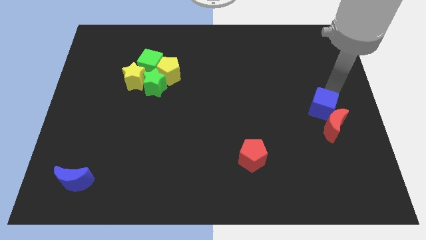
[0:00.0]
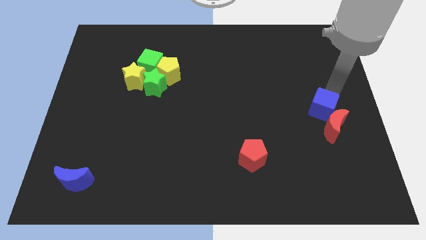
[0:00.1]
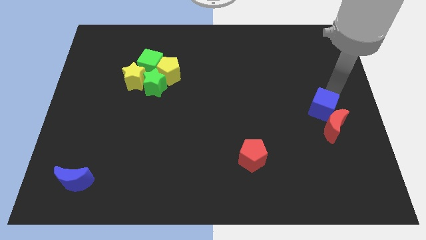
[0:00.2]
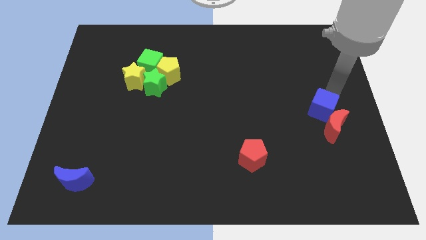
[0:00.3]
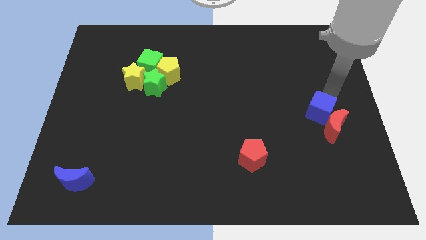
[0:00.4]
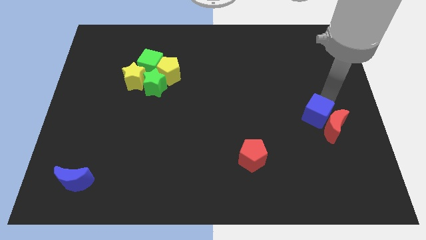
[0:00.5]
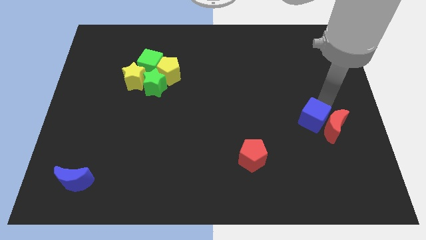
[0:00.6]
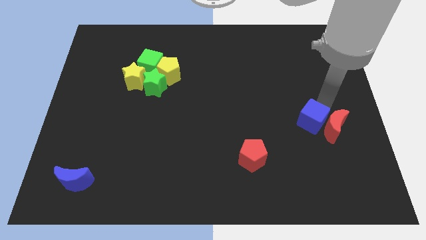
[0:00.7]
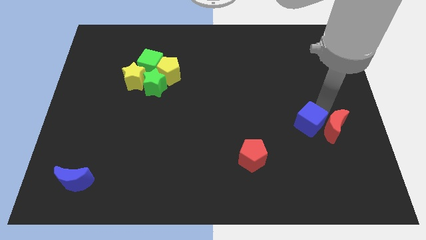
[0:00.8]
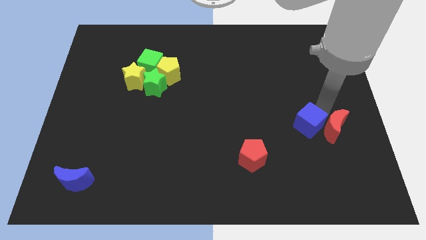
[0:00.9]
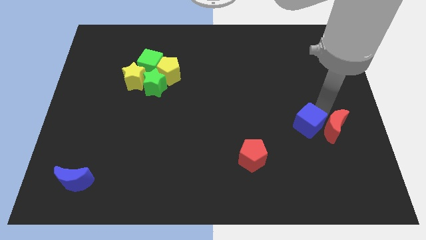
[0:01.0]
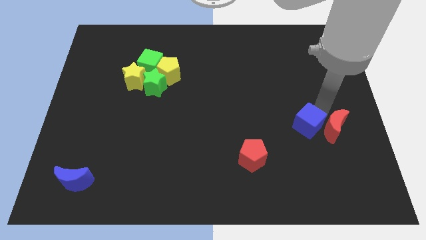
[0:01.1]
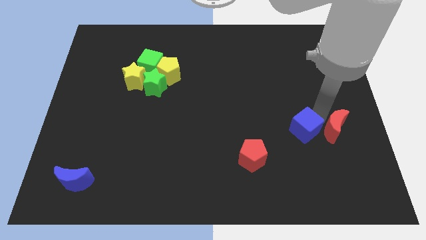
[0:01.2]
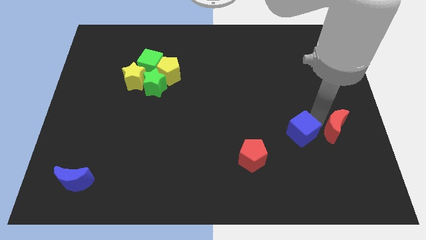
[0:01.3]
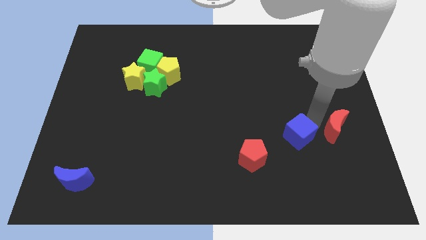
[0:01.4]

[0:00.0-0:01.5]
separate the blue cube from the red moon

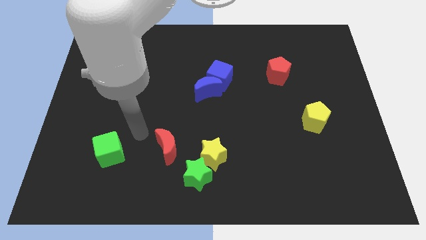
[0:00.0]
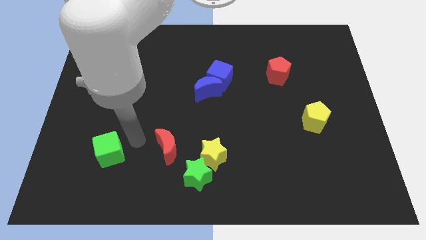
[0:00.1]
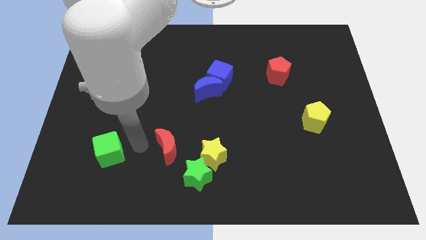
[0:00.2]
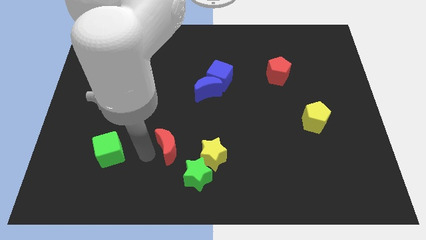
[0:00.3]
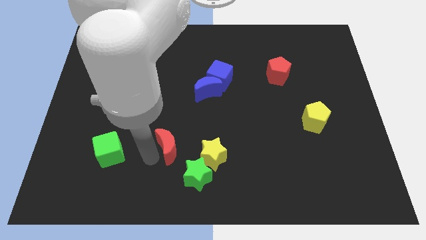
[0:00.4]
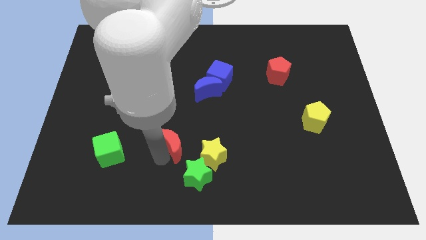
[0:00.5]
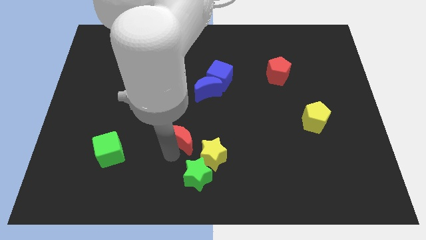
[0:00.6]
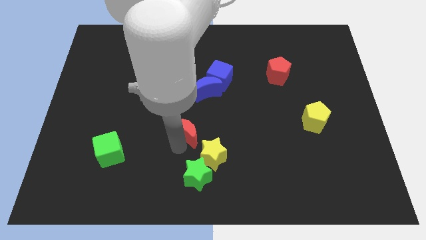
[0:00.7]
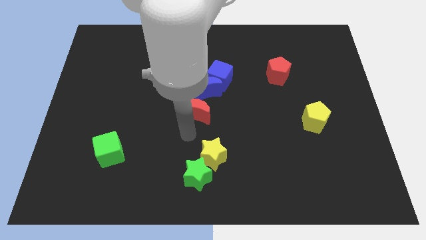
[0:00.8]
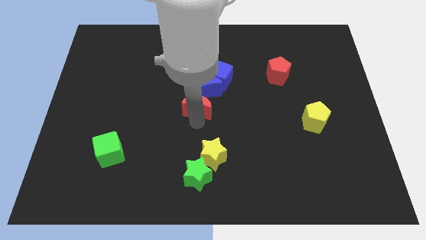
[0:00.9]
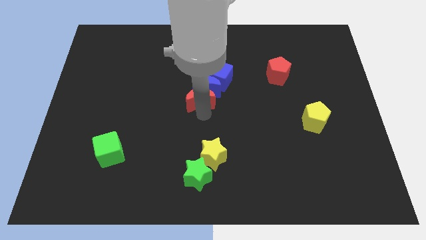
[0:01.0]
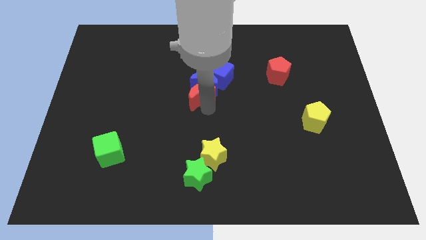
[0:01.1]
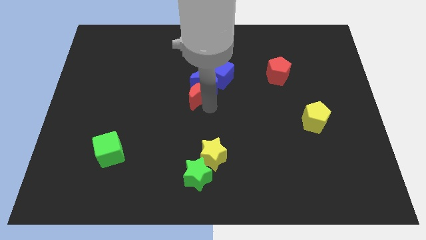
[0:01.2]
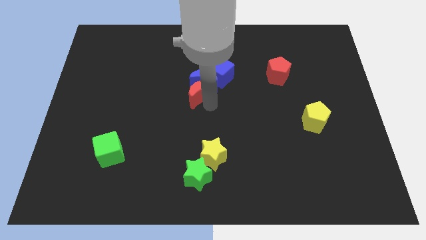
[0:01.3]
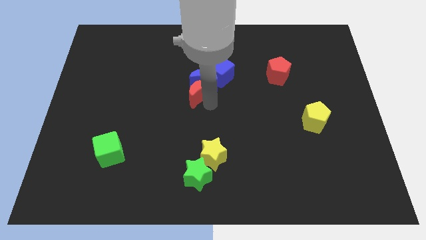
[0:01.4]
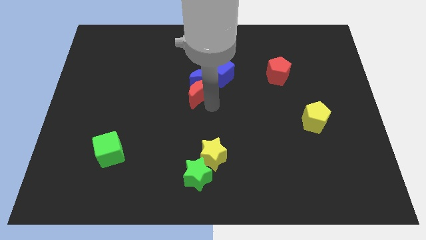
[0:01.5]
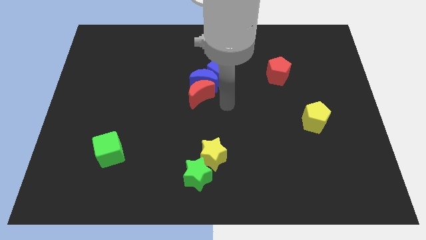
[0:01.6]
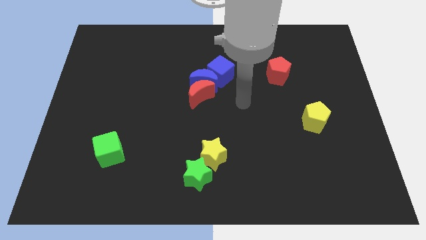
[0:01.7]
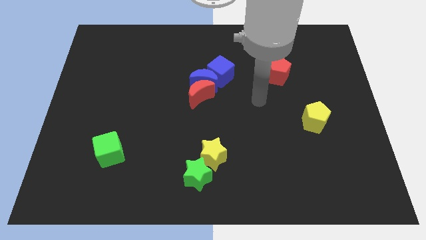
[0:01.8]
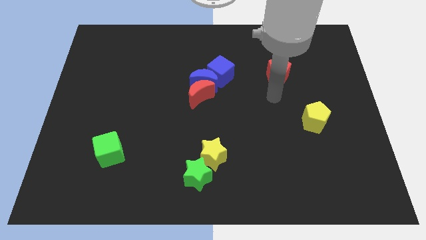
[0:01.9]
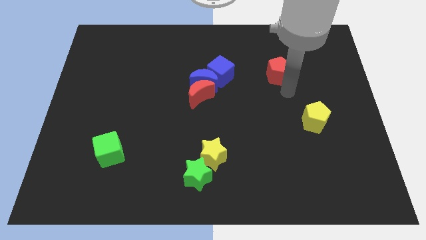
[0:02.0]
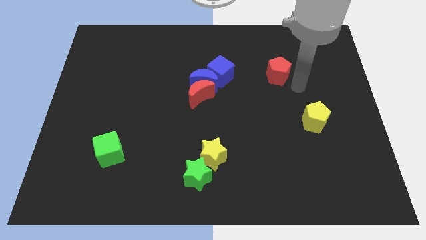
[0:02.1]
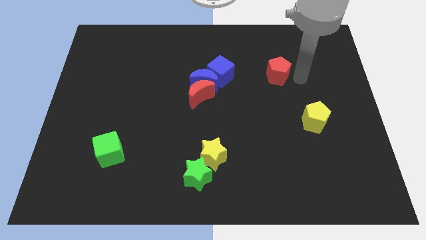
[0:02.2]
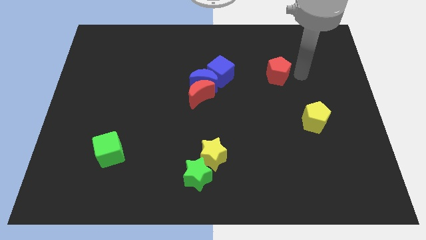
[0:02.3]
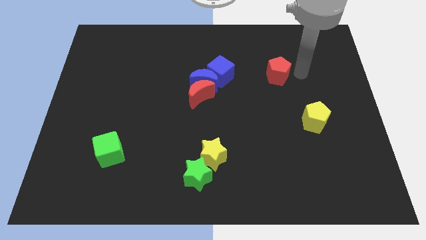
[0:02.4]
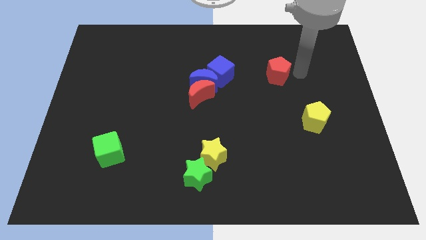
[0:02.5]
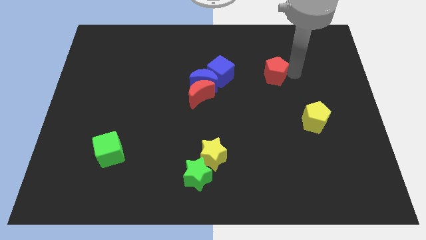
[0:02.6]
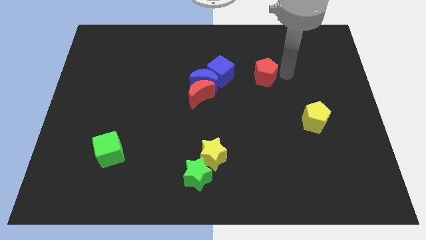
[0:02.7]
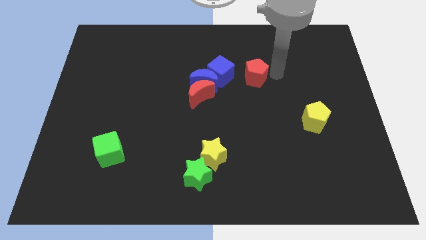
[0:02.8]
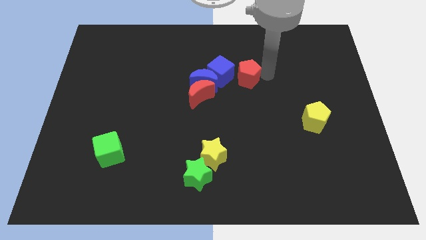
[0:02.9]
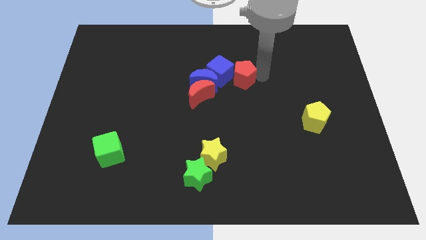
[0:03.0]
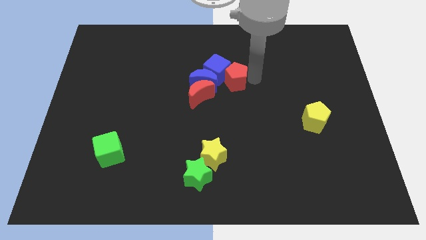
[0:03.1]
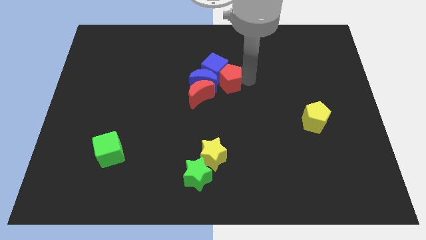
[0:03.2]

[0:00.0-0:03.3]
push the red blocks into the blue blocks

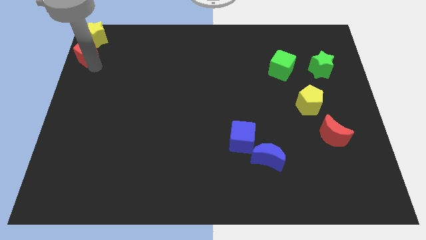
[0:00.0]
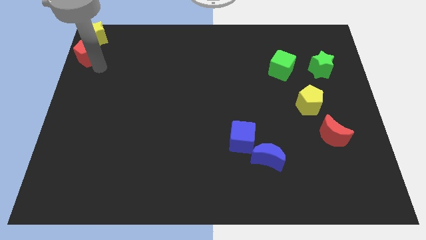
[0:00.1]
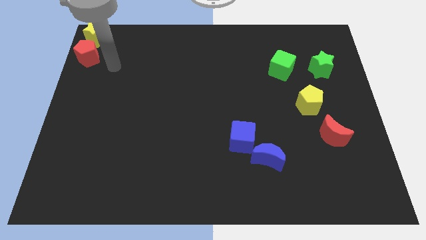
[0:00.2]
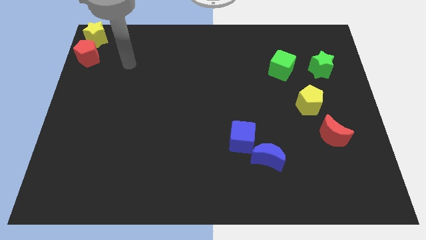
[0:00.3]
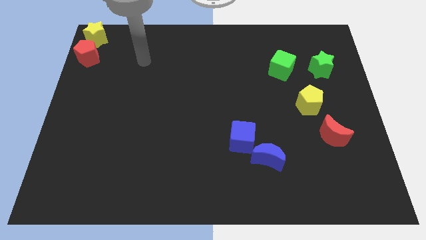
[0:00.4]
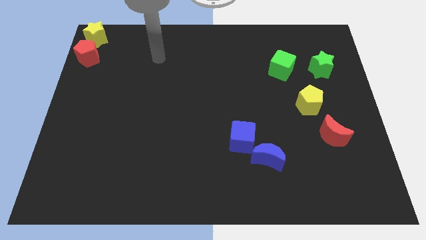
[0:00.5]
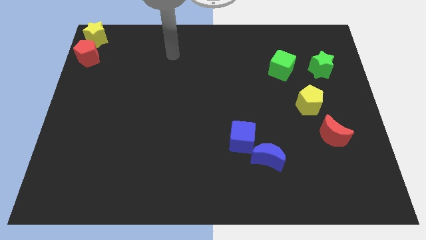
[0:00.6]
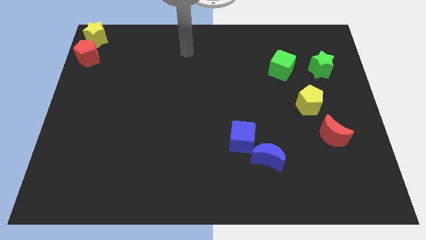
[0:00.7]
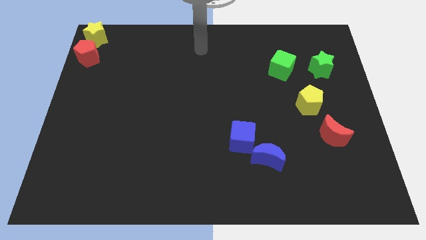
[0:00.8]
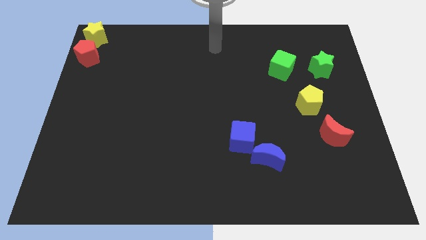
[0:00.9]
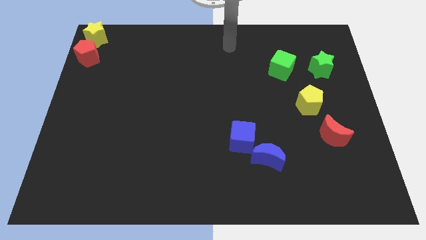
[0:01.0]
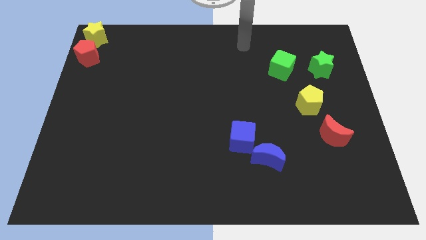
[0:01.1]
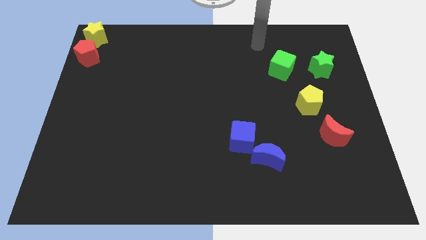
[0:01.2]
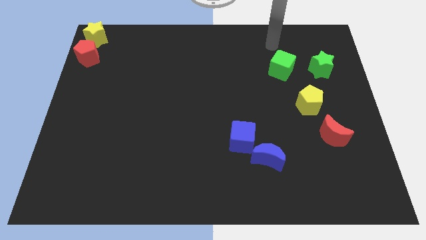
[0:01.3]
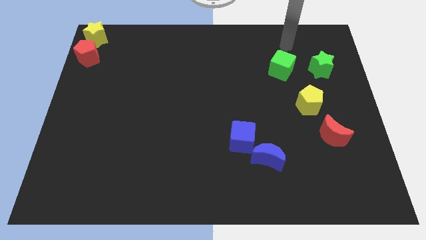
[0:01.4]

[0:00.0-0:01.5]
point your arm at the top of the green cube

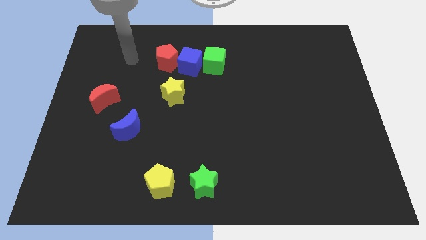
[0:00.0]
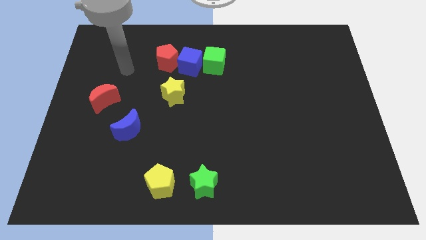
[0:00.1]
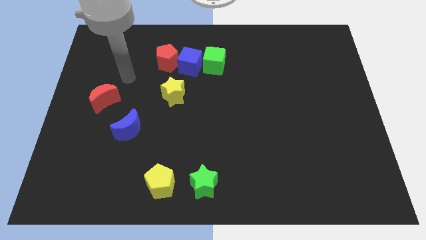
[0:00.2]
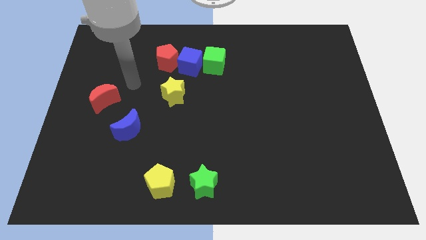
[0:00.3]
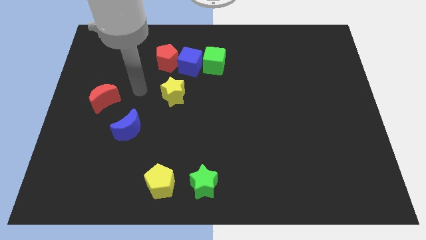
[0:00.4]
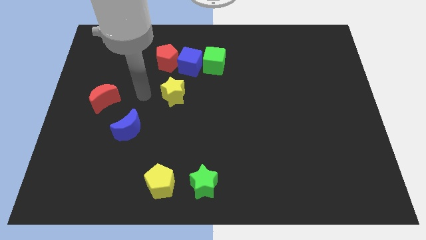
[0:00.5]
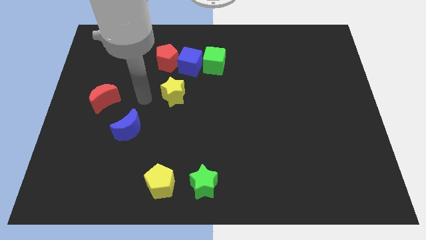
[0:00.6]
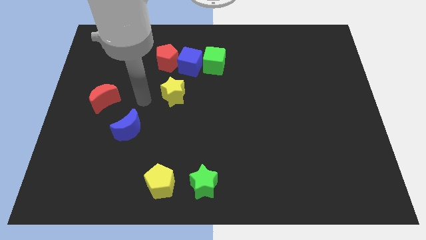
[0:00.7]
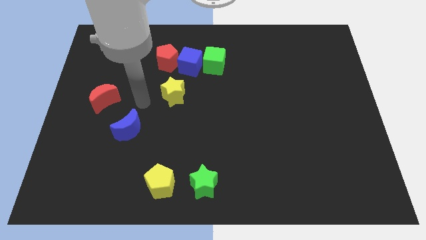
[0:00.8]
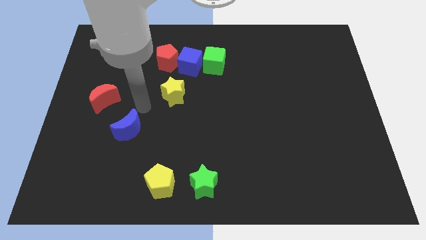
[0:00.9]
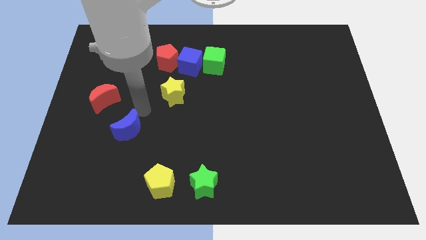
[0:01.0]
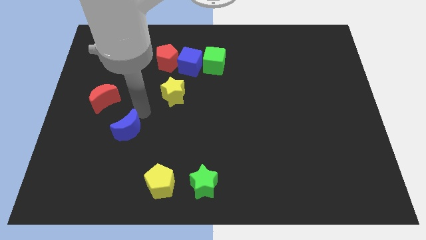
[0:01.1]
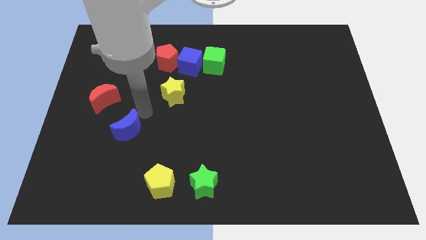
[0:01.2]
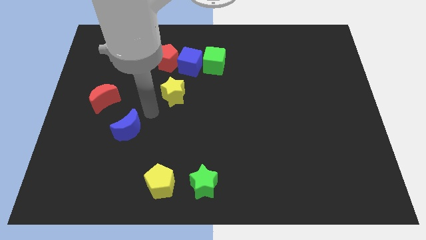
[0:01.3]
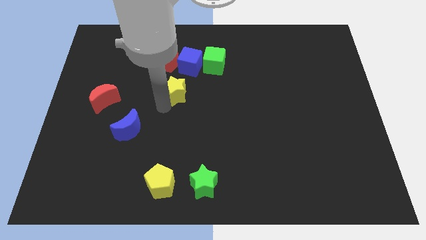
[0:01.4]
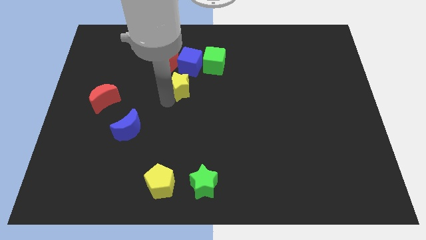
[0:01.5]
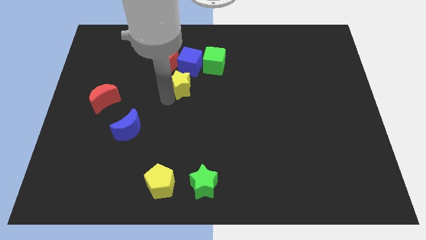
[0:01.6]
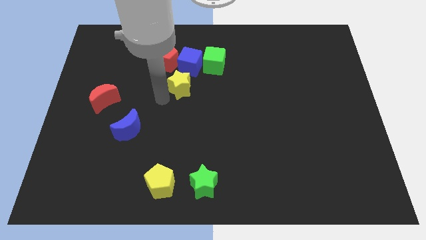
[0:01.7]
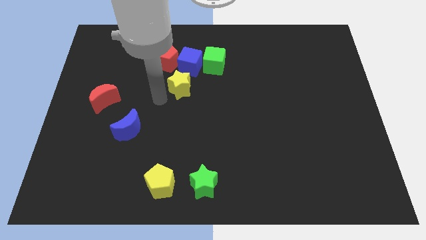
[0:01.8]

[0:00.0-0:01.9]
place the yellow star to the bottom of the blue cube

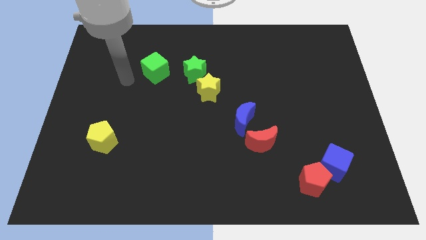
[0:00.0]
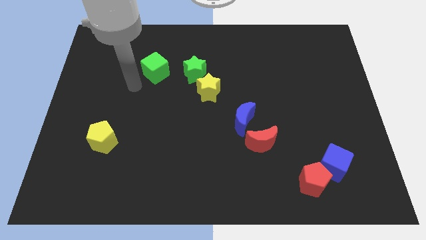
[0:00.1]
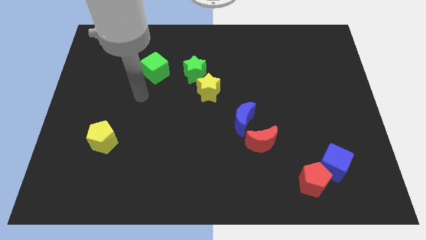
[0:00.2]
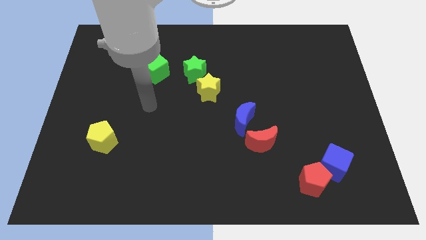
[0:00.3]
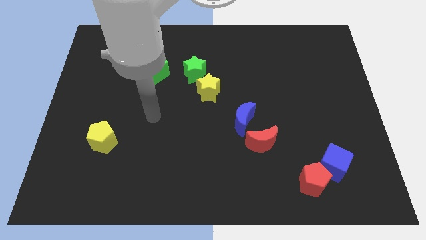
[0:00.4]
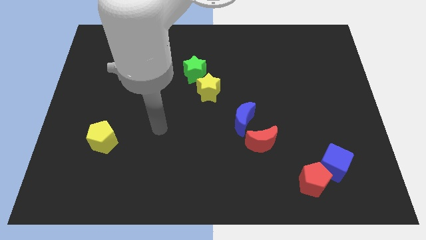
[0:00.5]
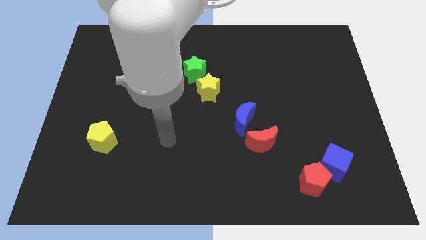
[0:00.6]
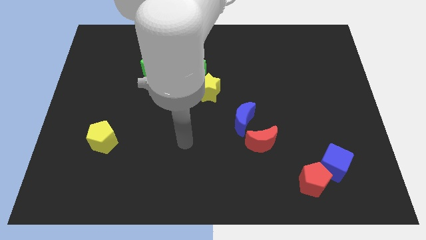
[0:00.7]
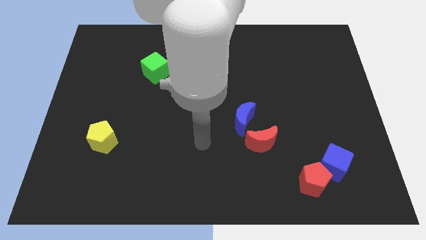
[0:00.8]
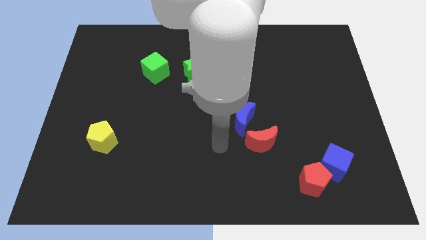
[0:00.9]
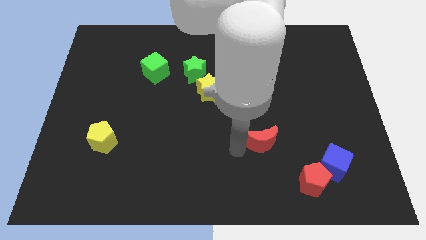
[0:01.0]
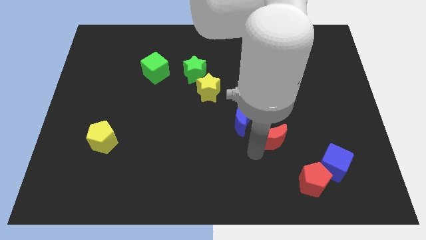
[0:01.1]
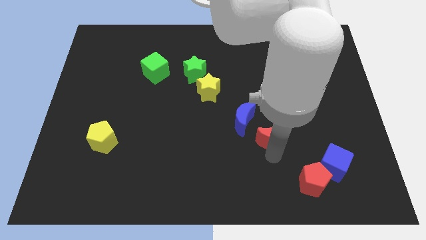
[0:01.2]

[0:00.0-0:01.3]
touch the bottom of the red crescent
